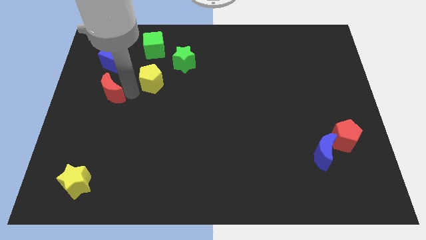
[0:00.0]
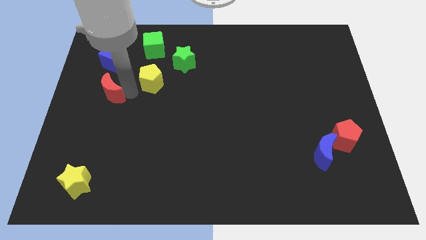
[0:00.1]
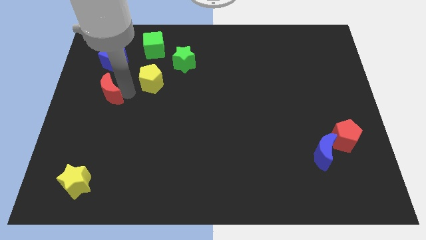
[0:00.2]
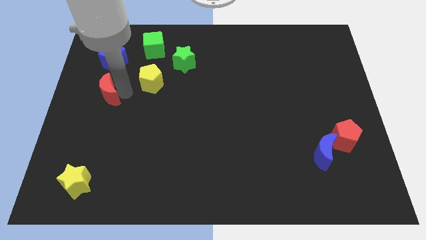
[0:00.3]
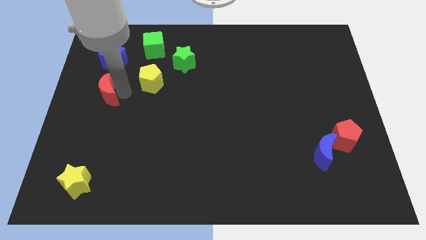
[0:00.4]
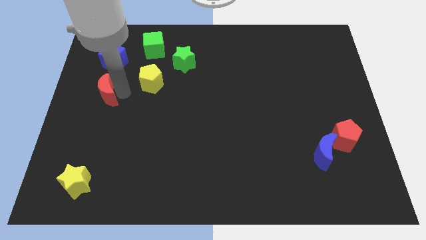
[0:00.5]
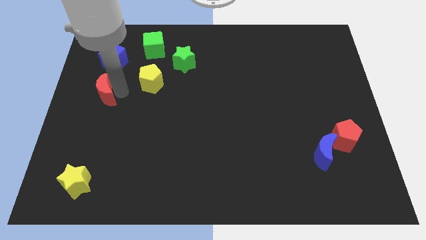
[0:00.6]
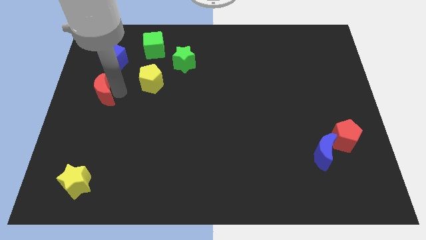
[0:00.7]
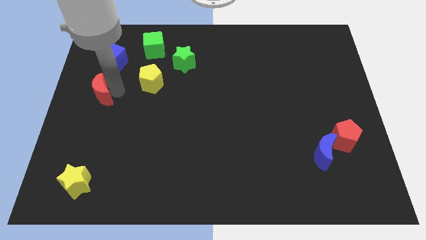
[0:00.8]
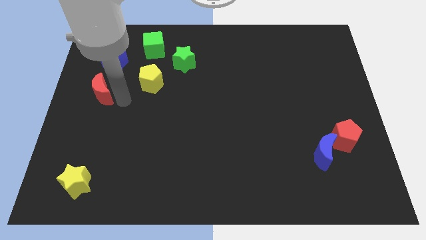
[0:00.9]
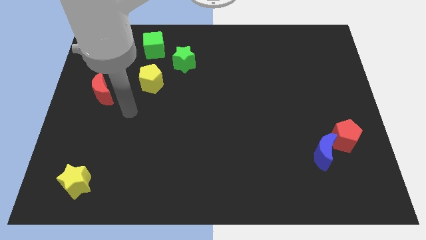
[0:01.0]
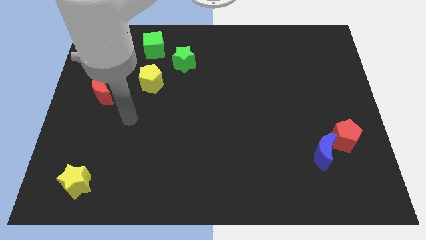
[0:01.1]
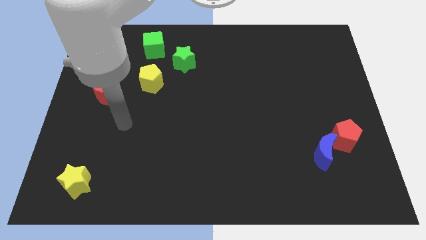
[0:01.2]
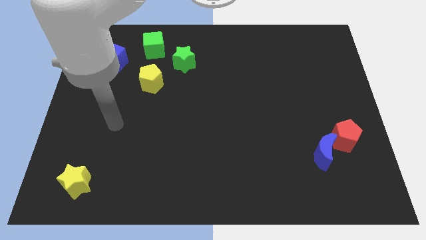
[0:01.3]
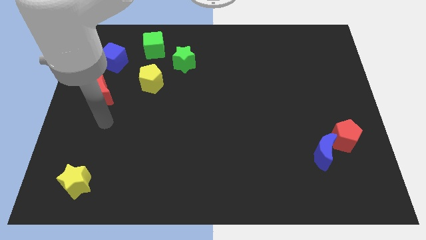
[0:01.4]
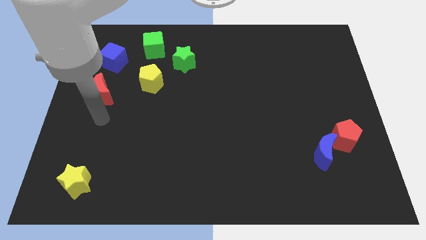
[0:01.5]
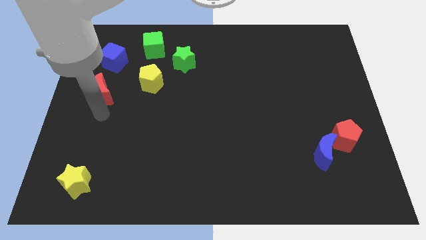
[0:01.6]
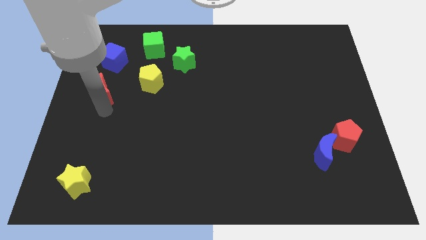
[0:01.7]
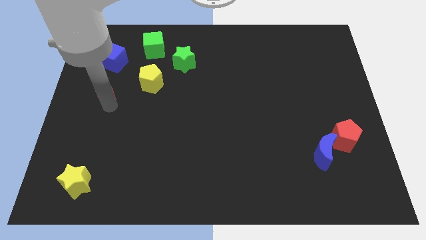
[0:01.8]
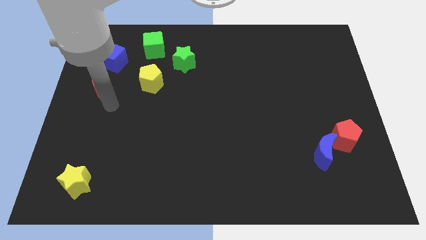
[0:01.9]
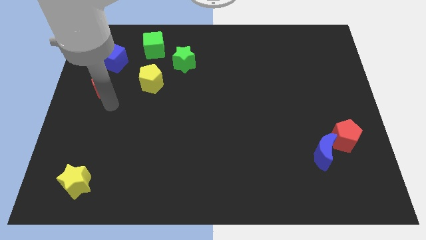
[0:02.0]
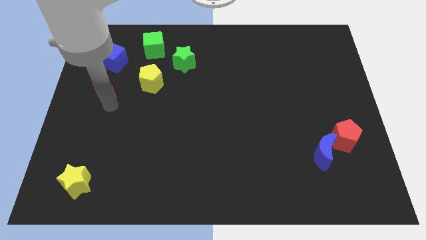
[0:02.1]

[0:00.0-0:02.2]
place red crescent below the blue cube

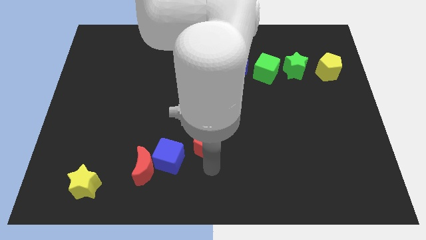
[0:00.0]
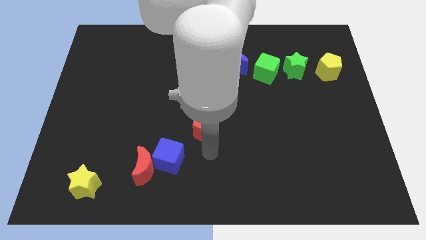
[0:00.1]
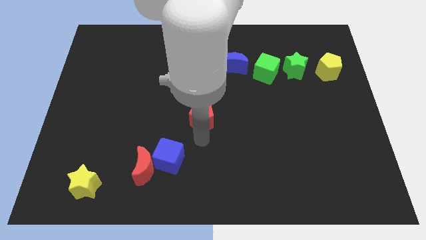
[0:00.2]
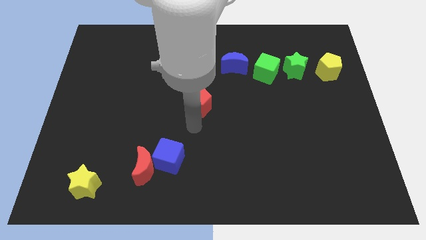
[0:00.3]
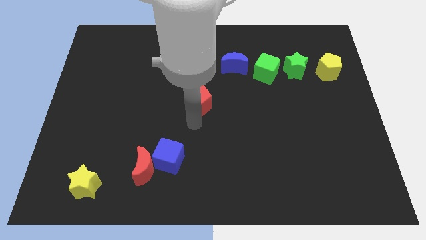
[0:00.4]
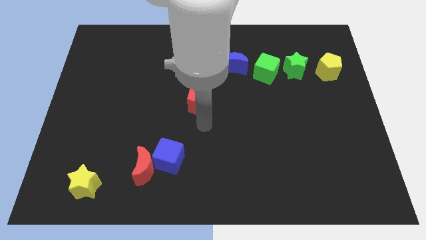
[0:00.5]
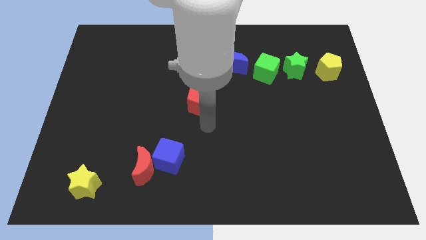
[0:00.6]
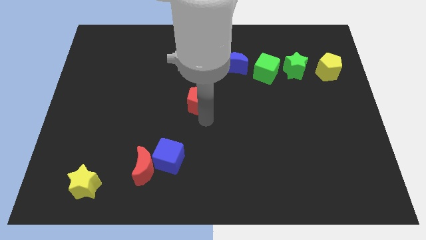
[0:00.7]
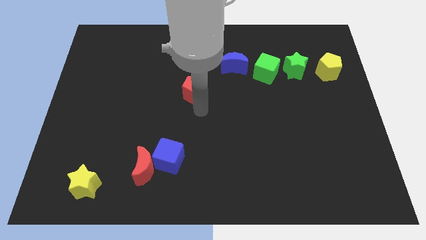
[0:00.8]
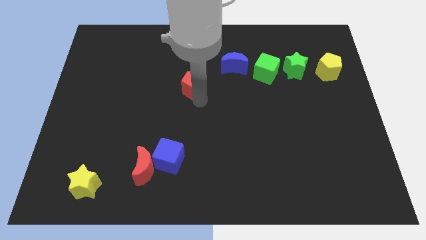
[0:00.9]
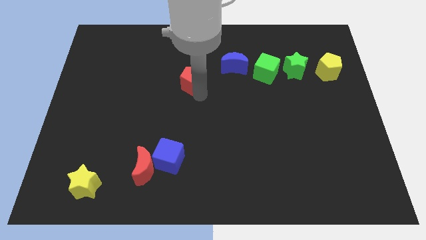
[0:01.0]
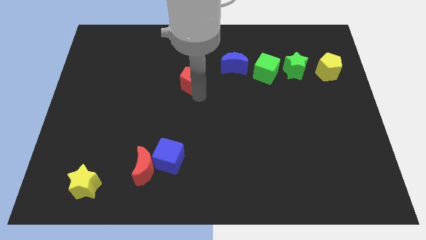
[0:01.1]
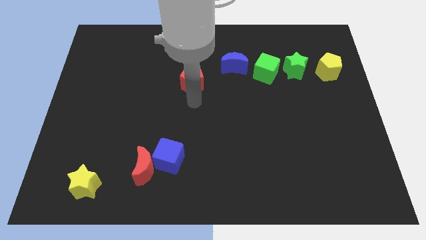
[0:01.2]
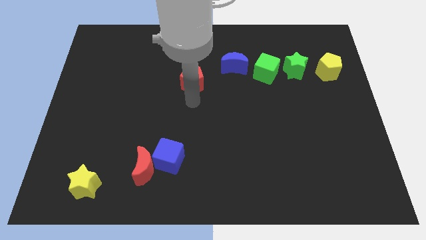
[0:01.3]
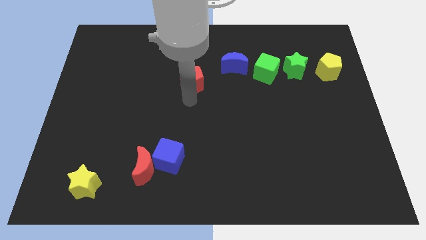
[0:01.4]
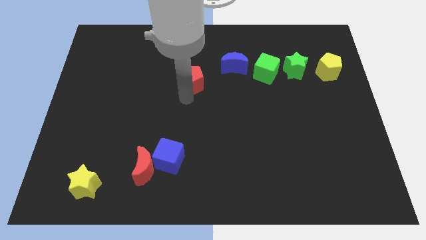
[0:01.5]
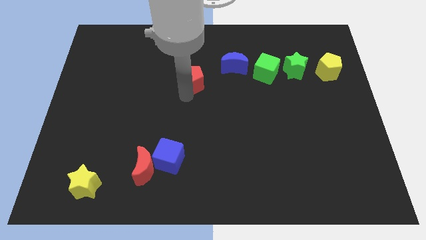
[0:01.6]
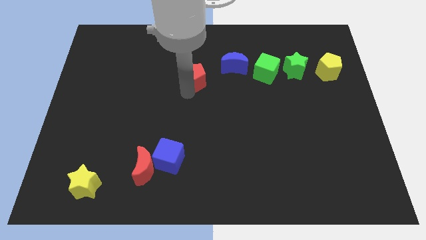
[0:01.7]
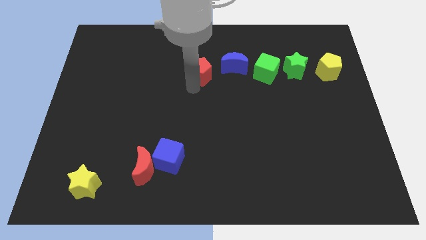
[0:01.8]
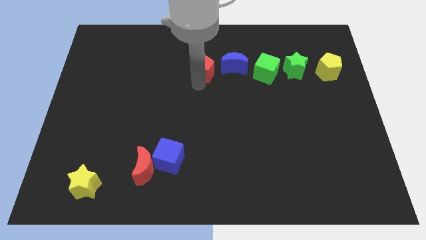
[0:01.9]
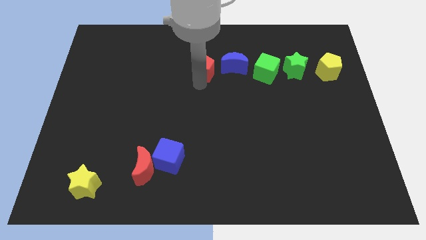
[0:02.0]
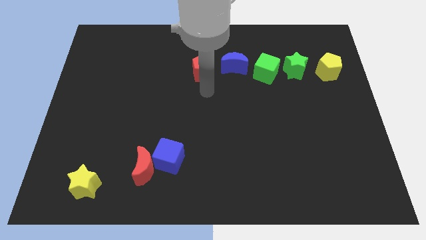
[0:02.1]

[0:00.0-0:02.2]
push the red pentagon towards the left side of the blue crescent

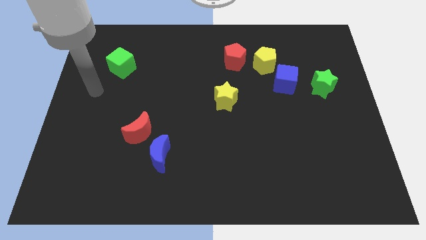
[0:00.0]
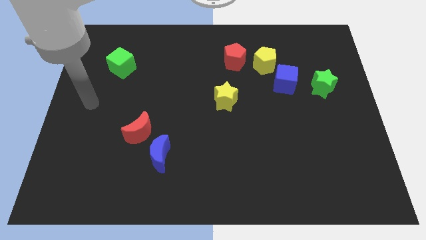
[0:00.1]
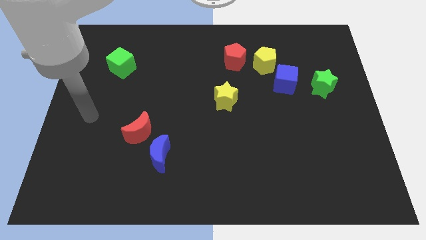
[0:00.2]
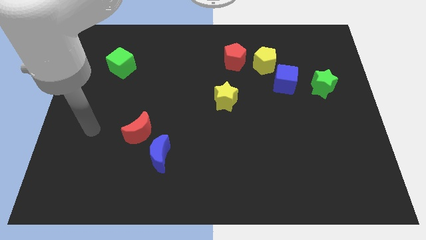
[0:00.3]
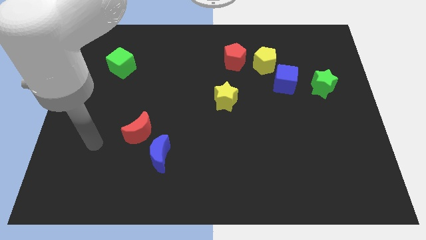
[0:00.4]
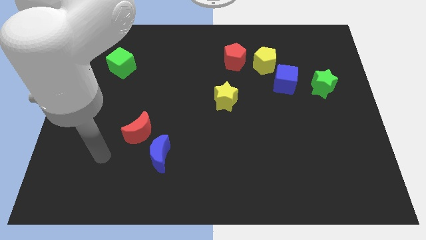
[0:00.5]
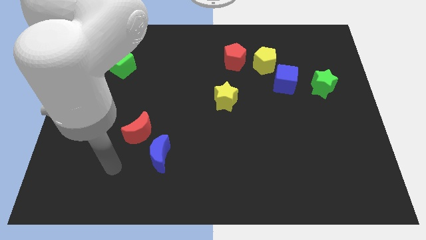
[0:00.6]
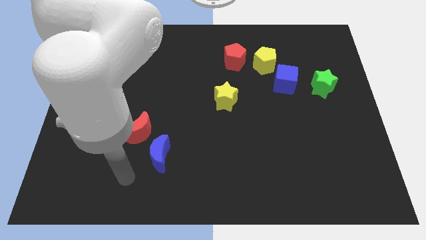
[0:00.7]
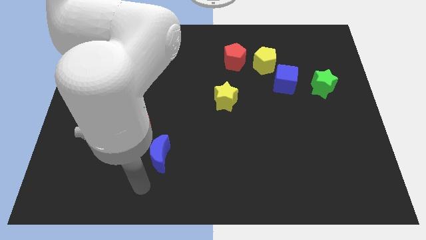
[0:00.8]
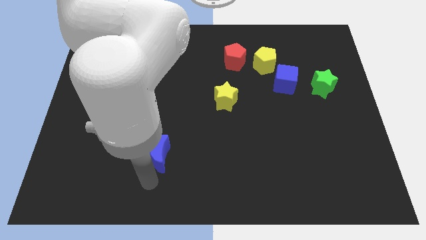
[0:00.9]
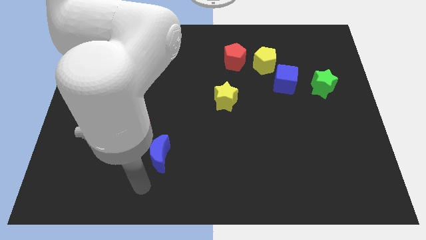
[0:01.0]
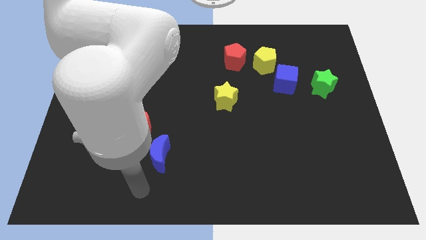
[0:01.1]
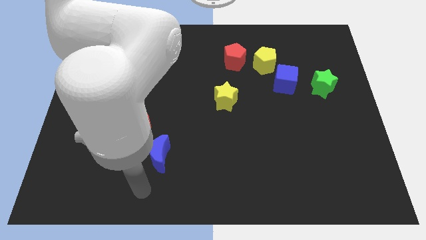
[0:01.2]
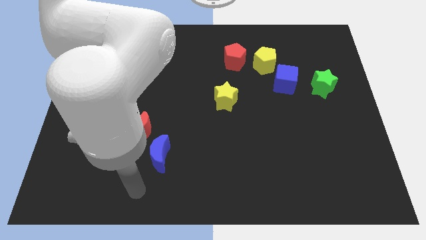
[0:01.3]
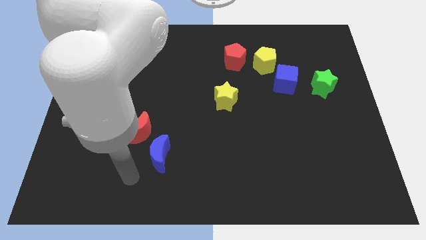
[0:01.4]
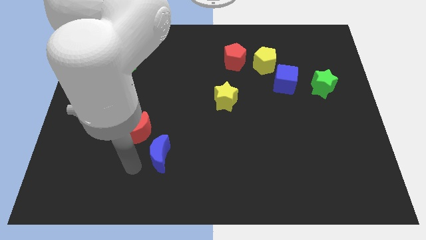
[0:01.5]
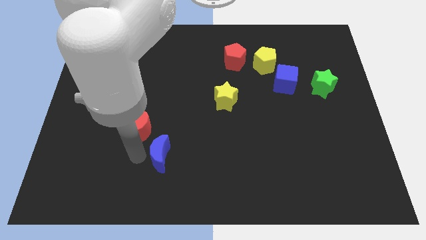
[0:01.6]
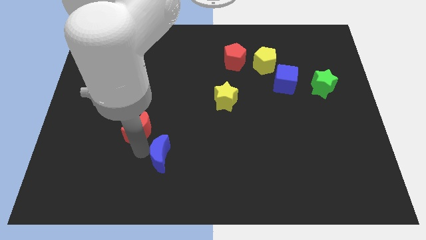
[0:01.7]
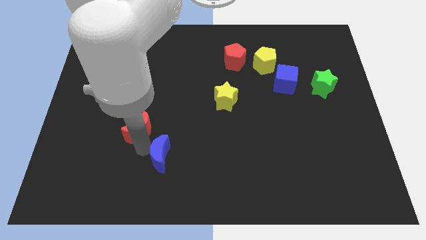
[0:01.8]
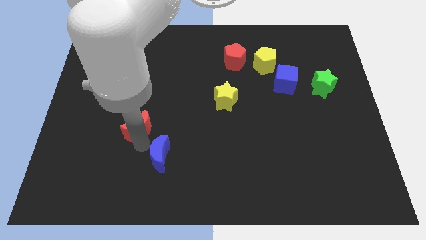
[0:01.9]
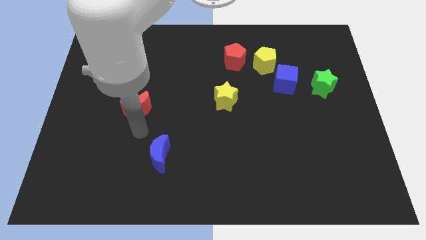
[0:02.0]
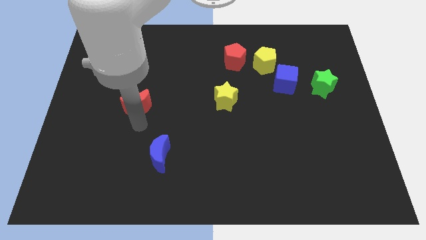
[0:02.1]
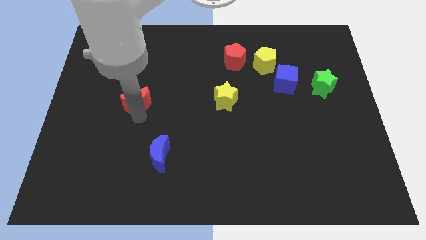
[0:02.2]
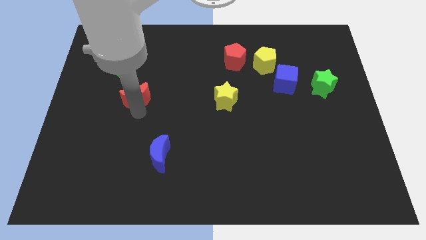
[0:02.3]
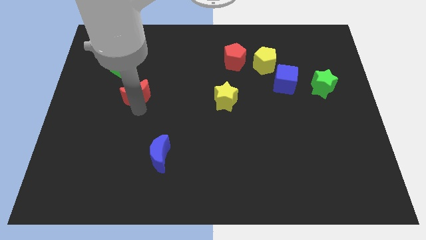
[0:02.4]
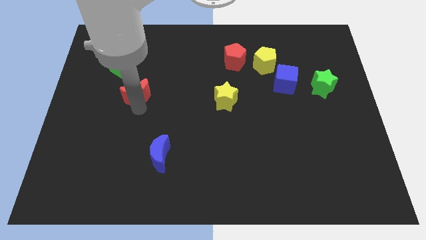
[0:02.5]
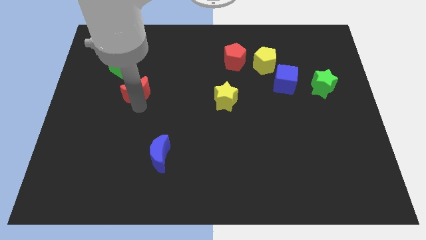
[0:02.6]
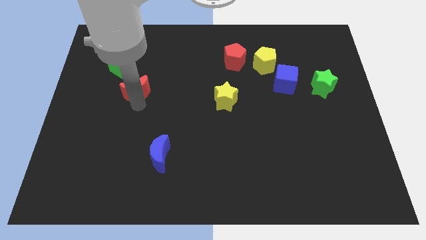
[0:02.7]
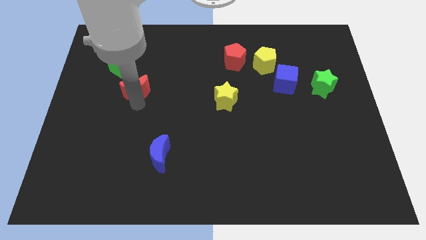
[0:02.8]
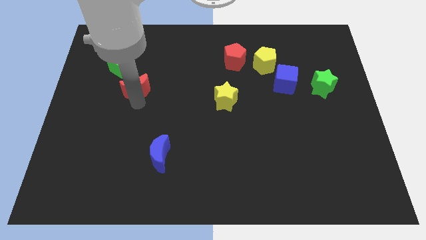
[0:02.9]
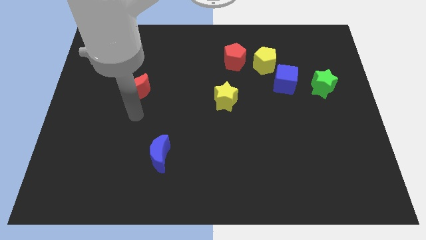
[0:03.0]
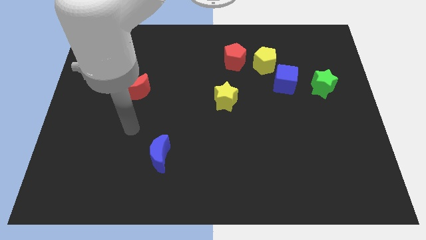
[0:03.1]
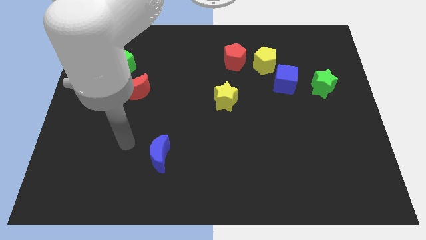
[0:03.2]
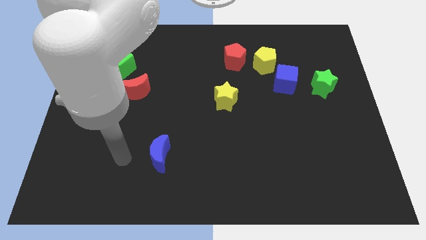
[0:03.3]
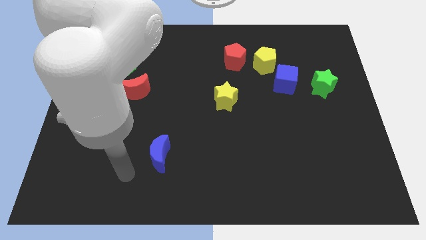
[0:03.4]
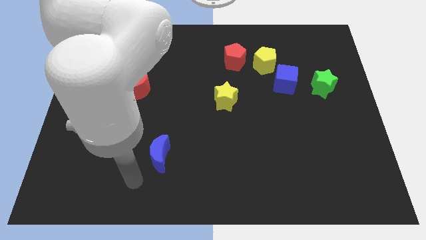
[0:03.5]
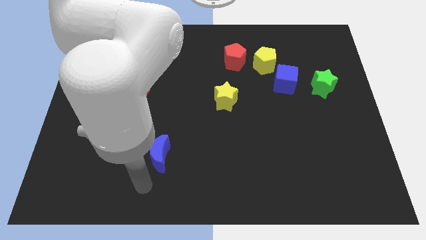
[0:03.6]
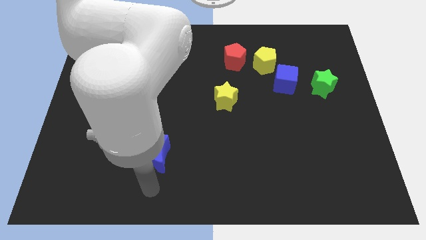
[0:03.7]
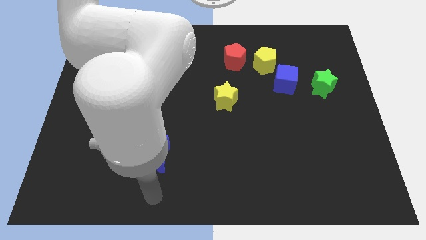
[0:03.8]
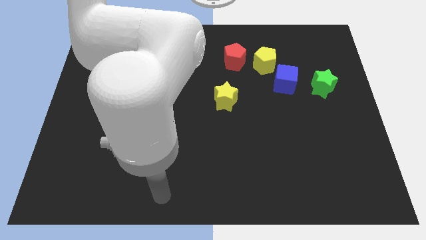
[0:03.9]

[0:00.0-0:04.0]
push the red moon close to the green cube

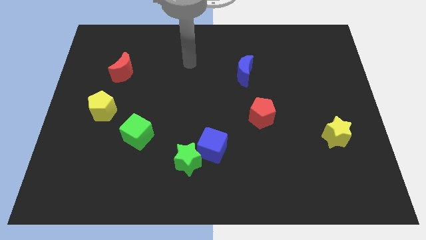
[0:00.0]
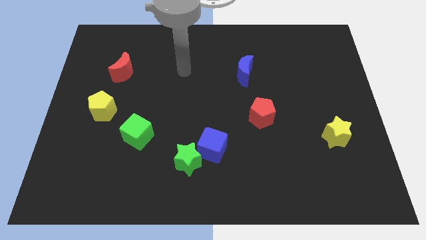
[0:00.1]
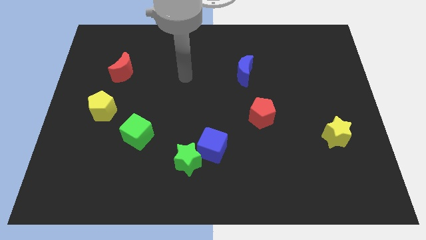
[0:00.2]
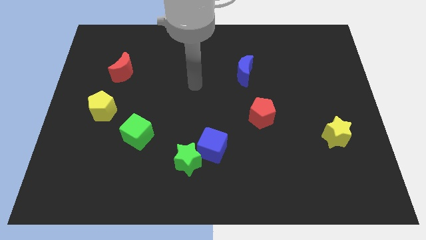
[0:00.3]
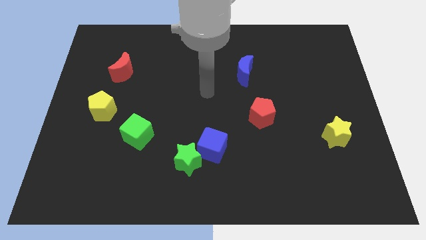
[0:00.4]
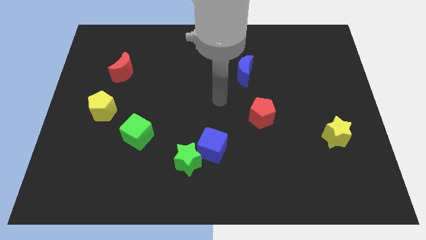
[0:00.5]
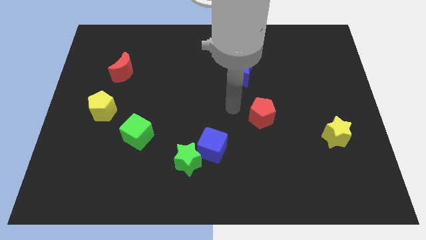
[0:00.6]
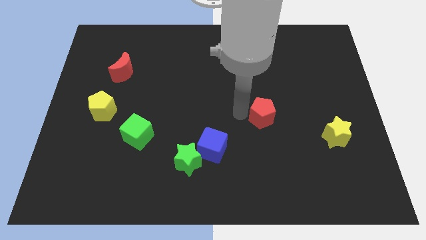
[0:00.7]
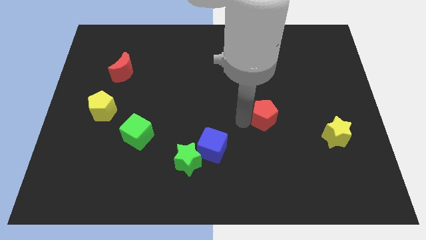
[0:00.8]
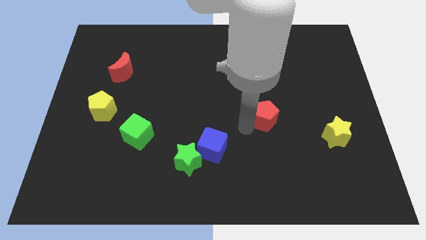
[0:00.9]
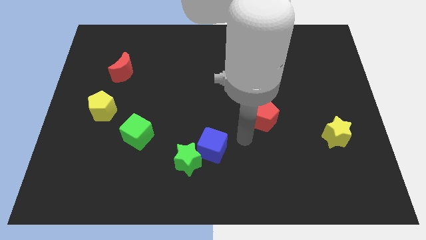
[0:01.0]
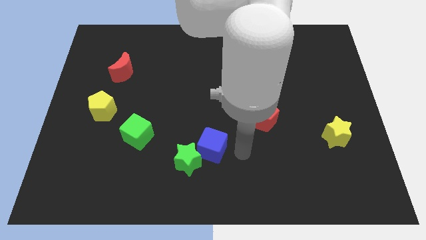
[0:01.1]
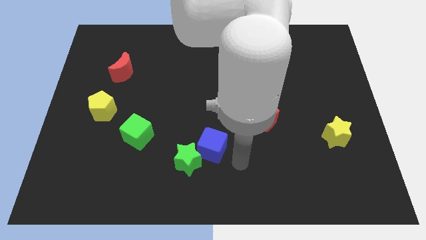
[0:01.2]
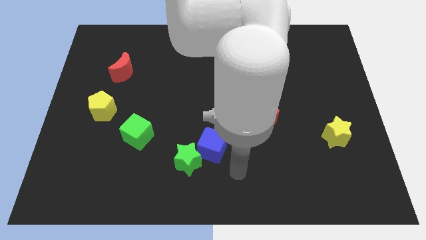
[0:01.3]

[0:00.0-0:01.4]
tap the red pentagon
